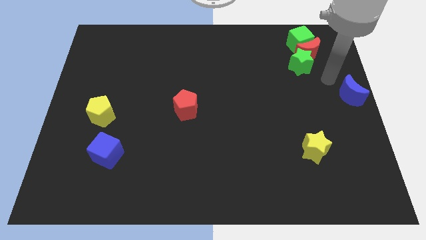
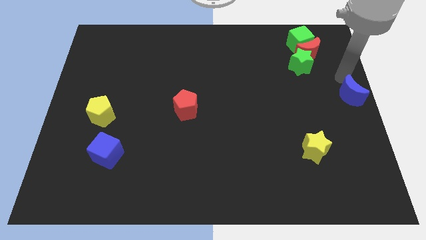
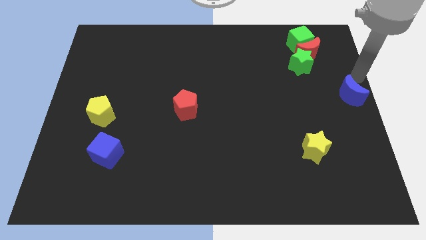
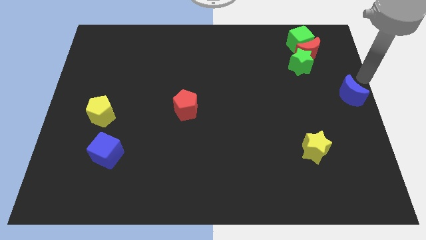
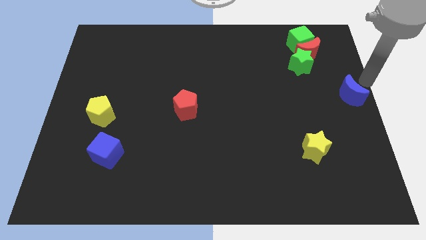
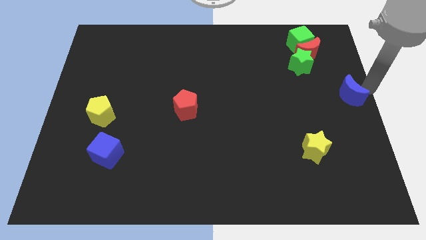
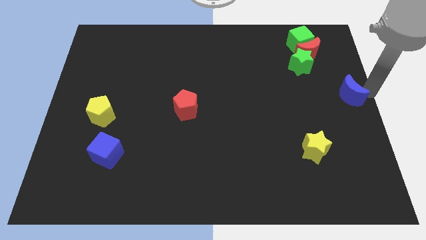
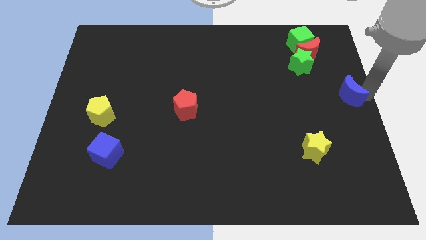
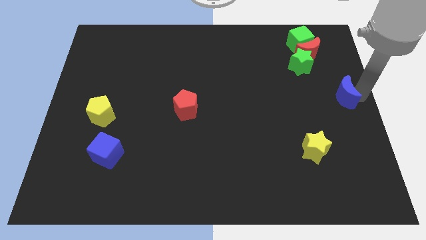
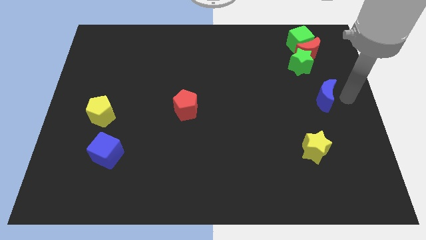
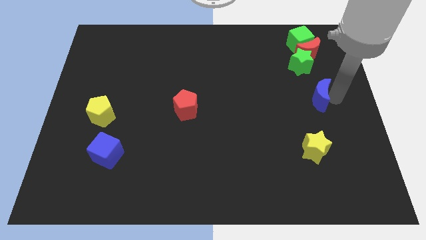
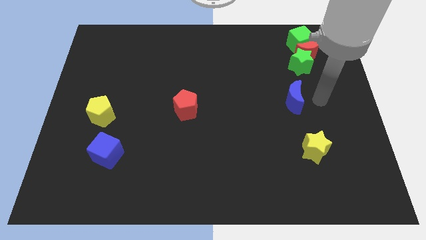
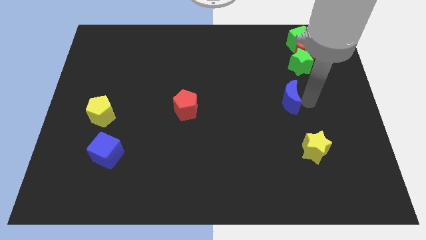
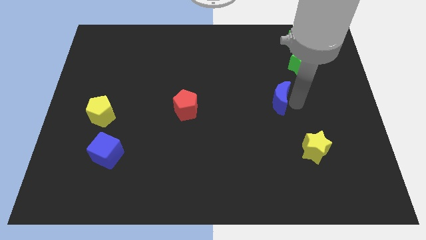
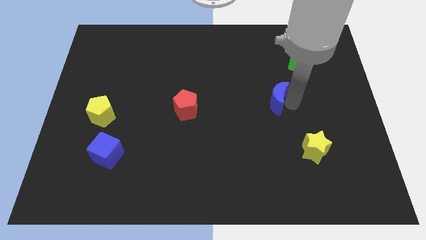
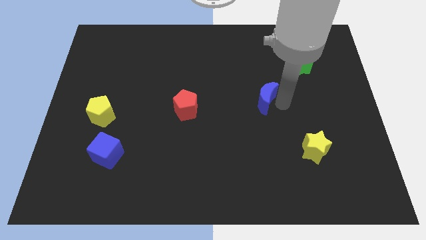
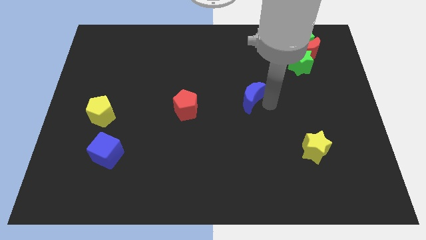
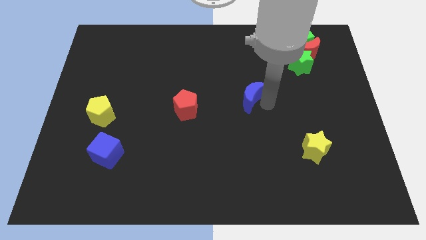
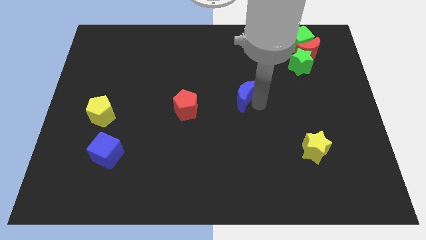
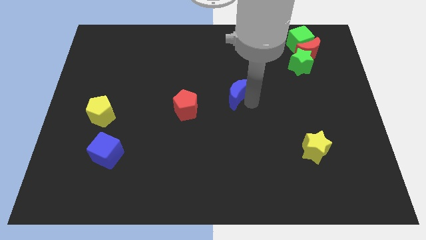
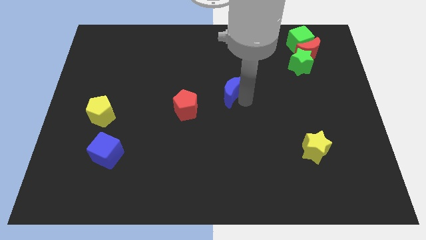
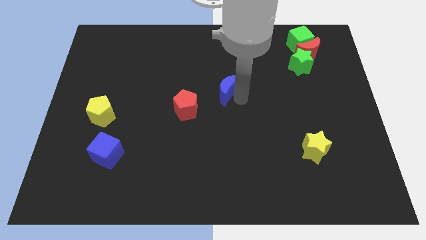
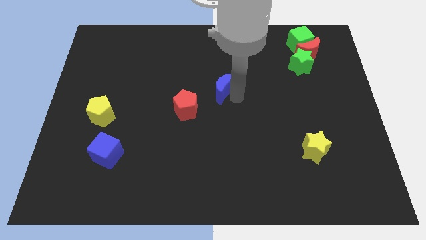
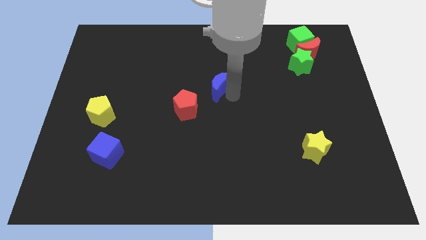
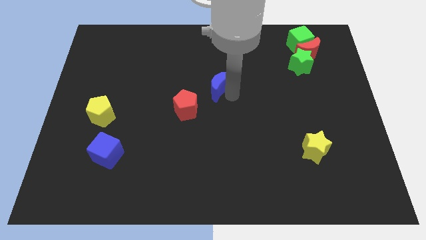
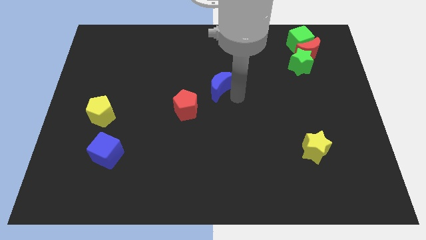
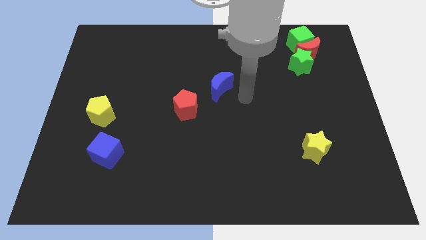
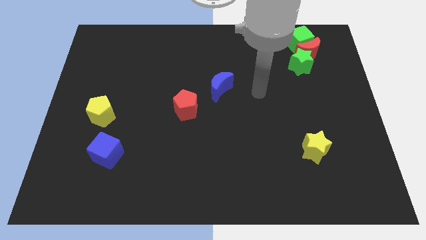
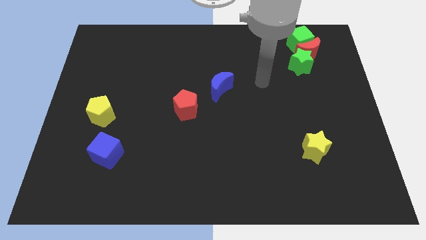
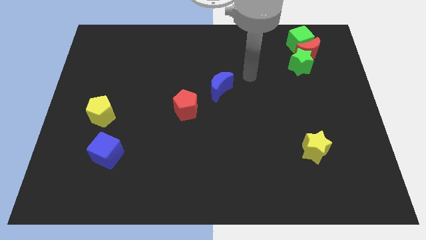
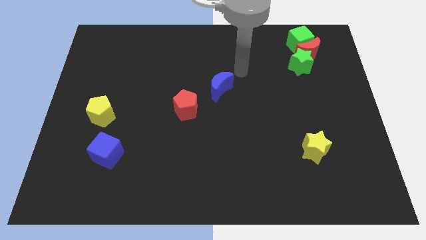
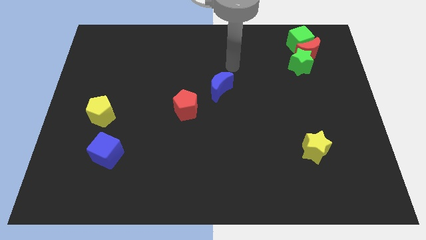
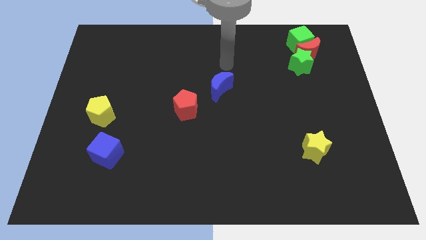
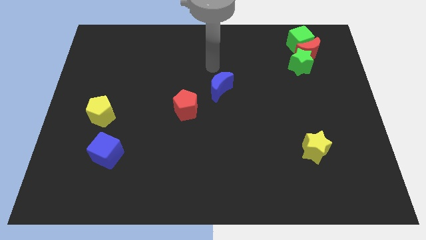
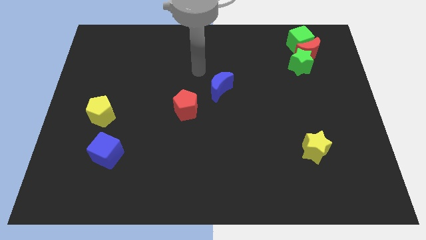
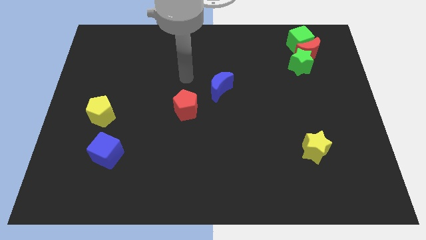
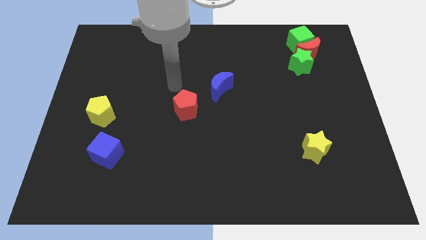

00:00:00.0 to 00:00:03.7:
move the blue crescent to the right side of the red pentagon

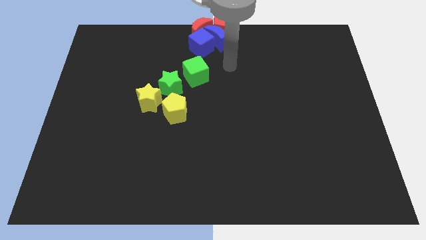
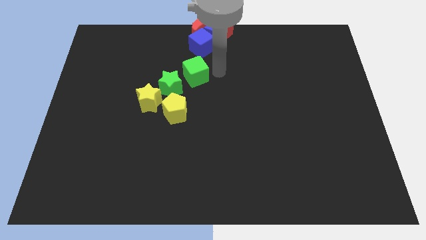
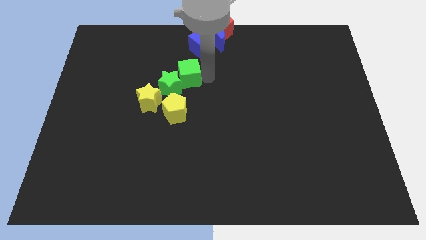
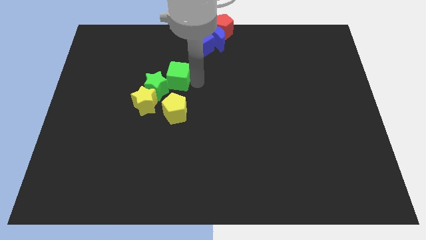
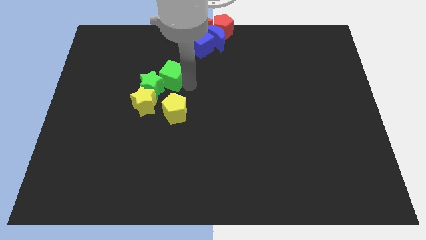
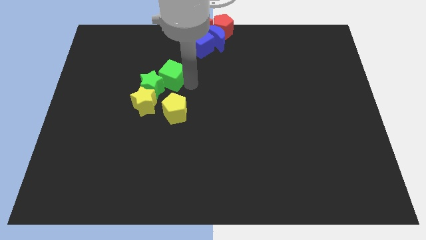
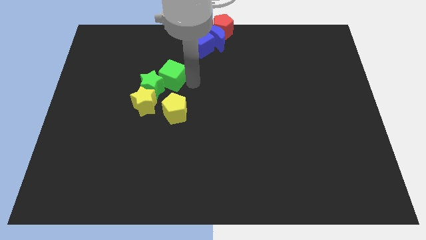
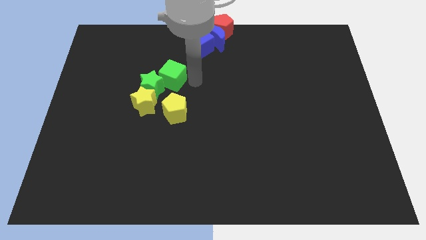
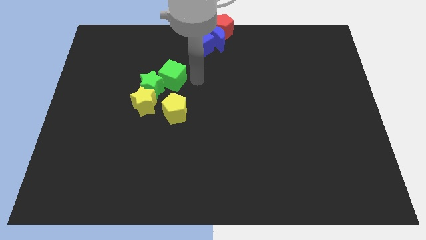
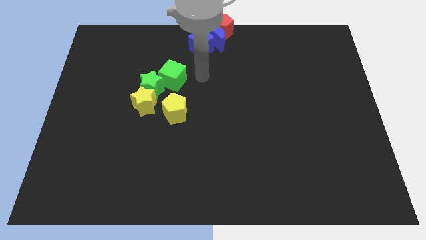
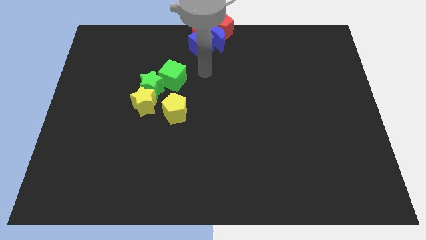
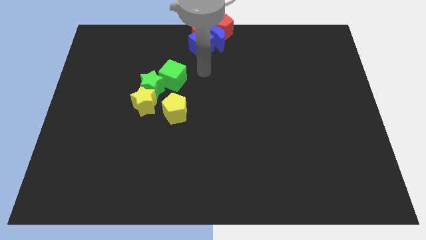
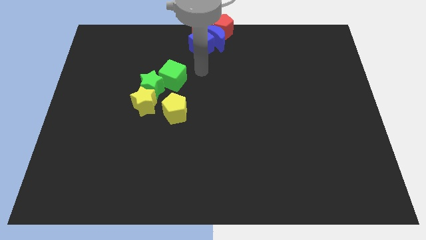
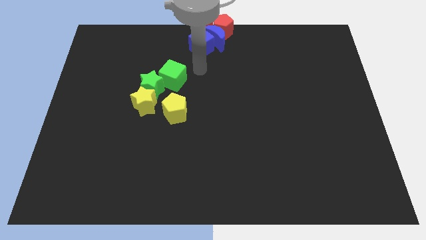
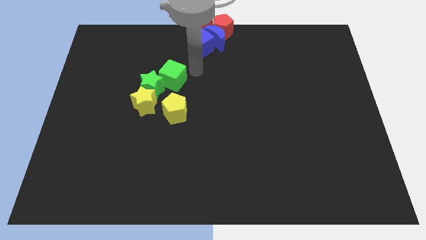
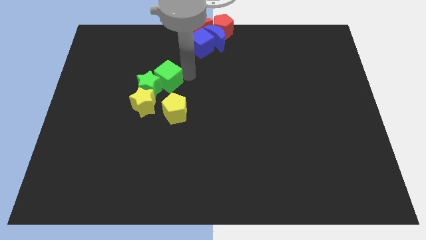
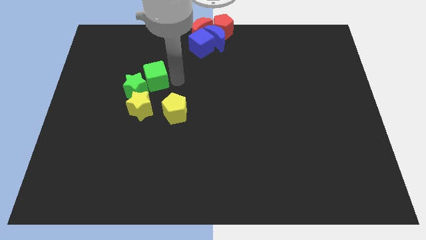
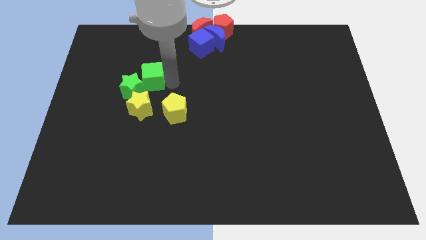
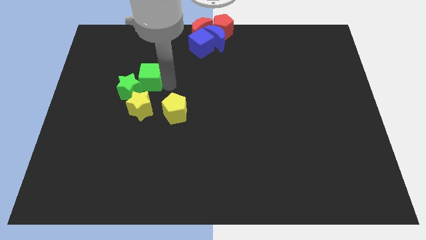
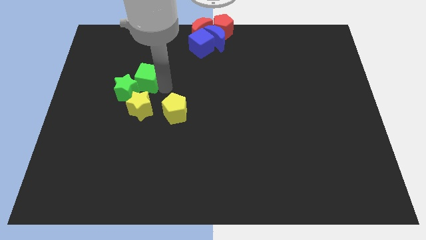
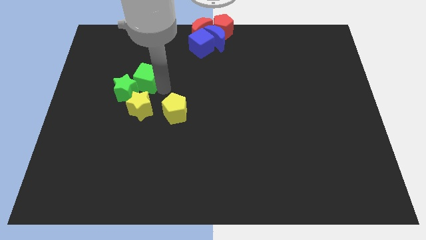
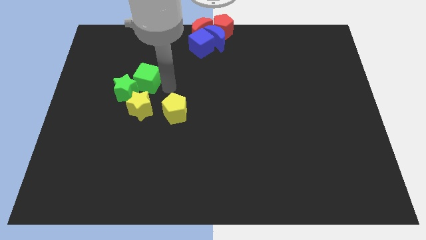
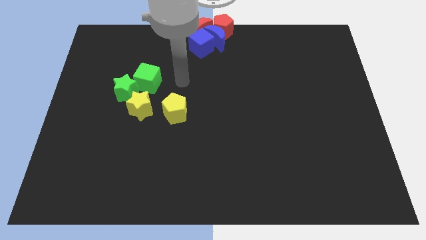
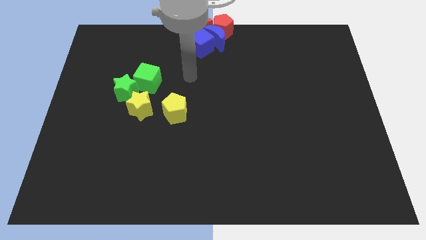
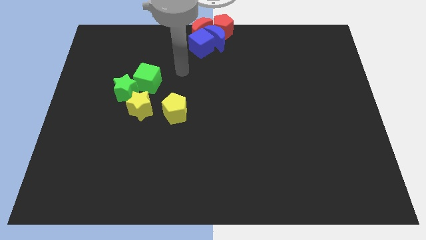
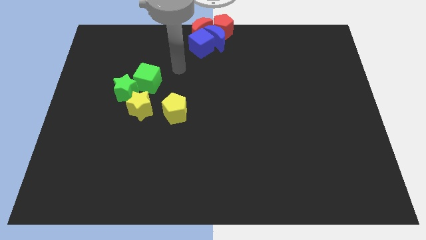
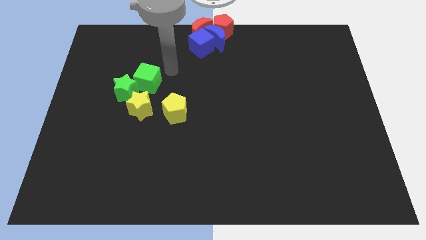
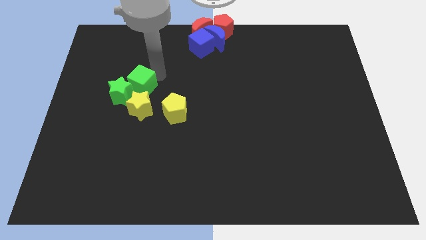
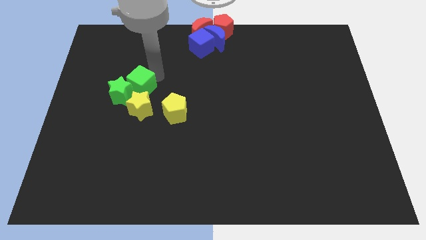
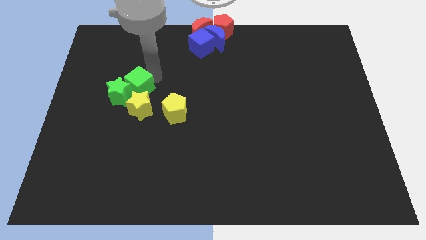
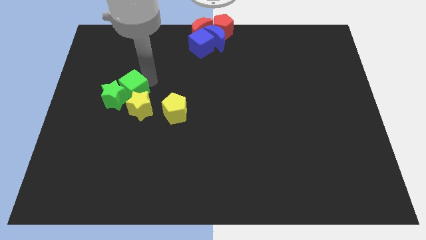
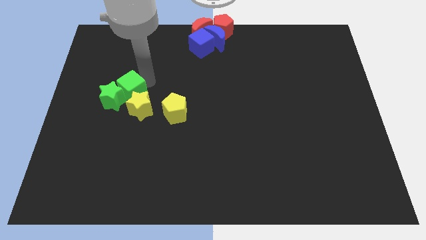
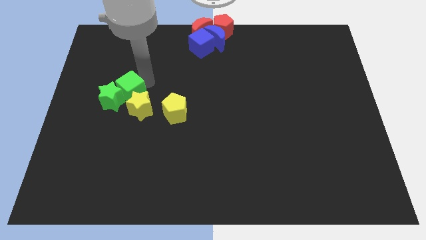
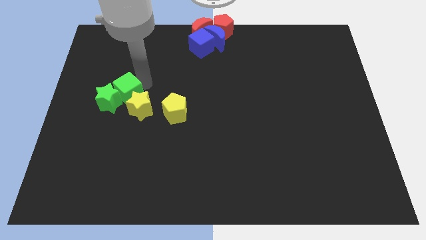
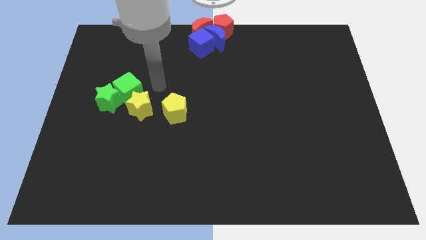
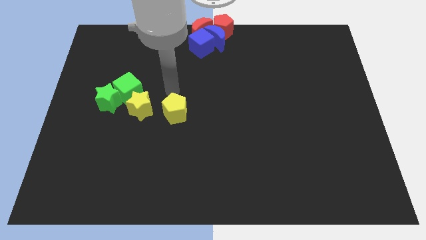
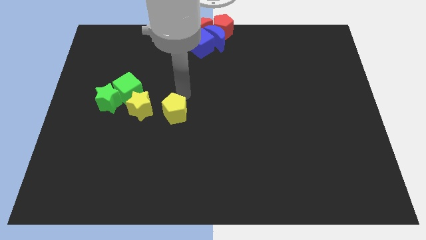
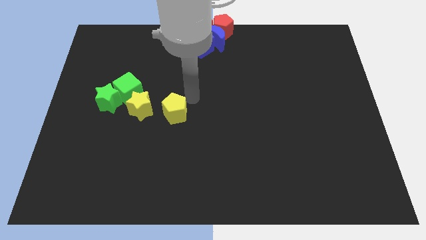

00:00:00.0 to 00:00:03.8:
push green star and green cube towards the left center

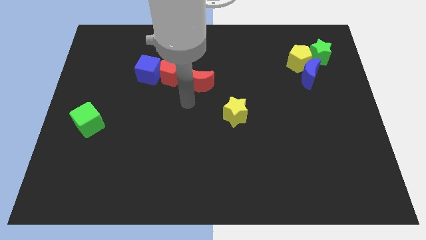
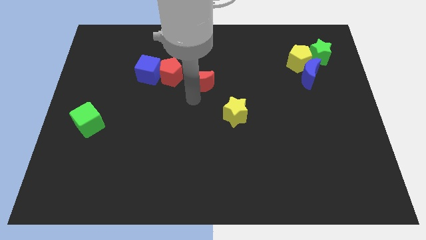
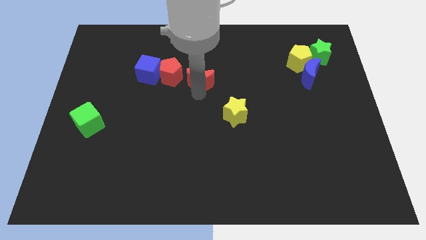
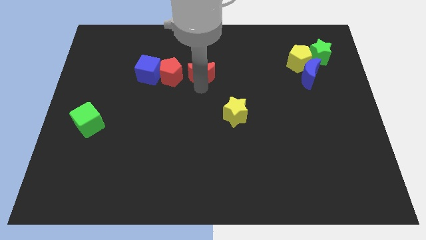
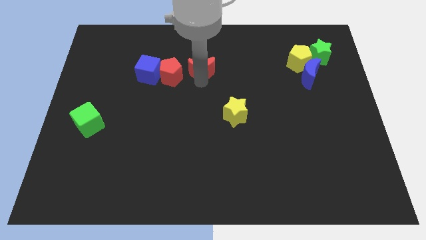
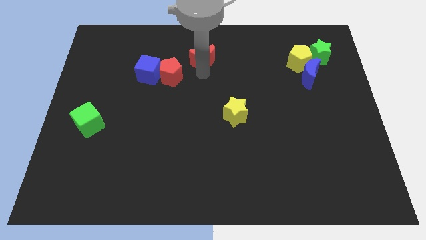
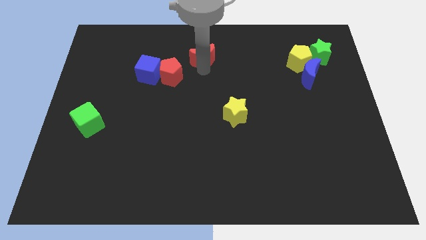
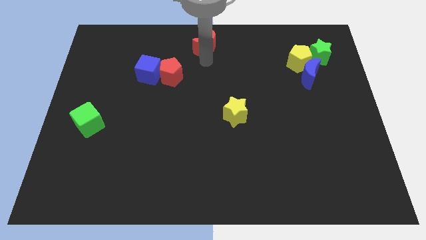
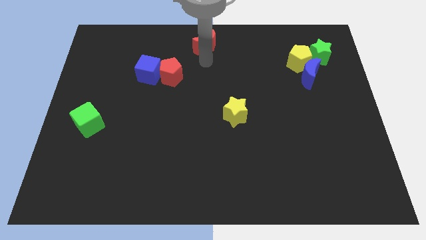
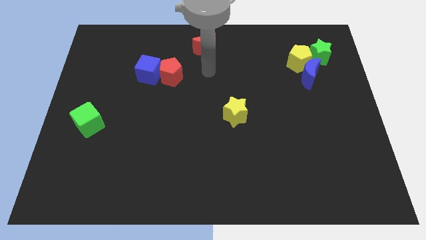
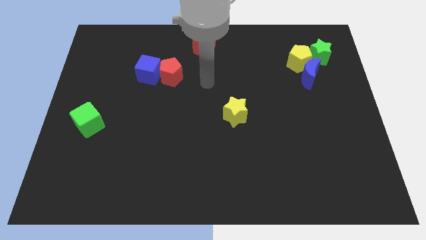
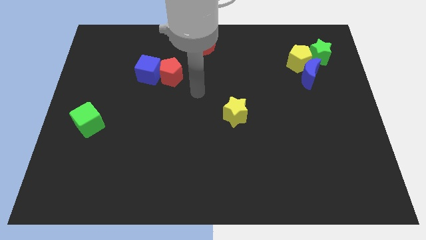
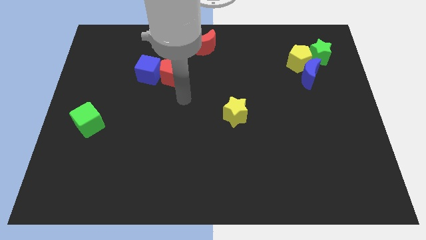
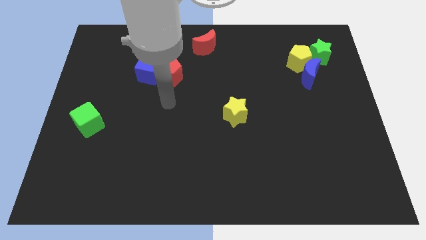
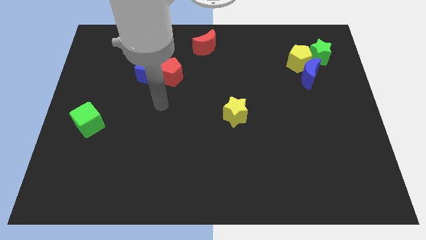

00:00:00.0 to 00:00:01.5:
place red crescent at the top center of the board

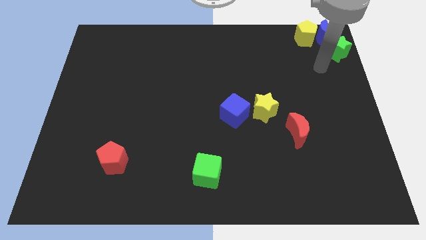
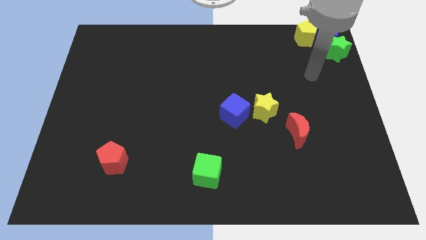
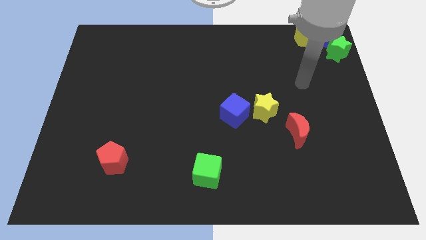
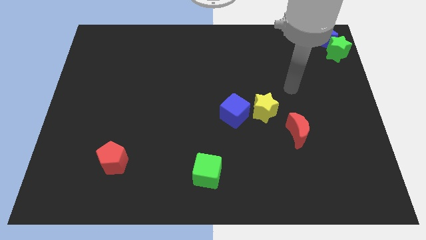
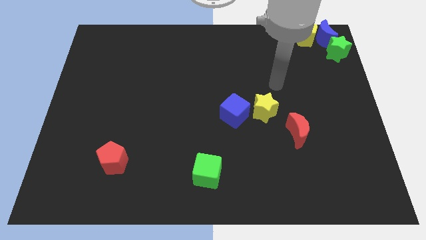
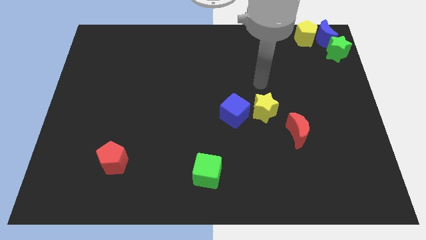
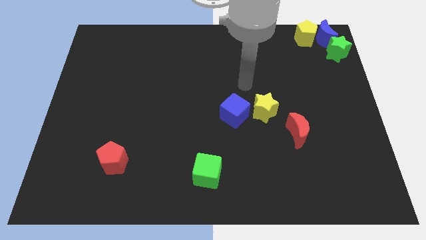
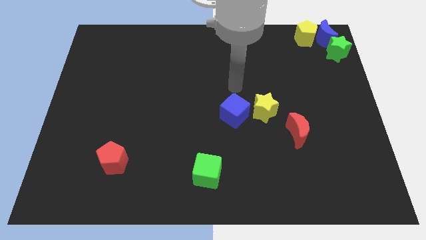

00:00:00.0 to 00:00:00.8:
move the arm away from the green star
